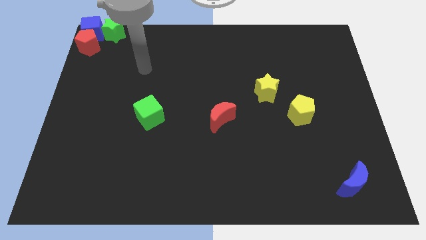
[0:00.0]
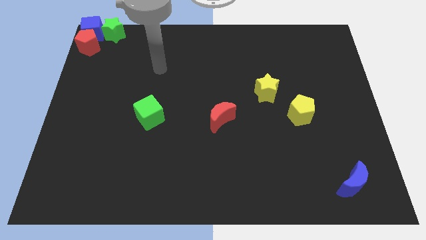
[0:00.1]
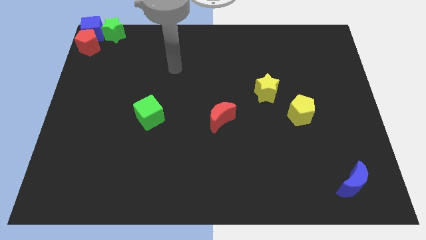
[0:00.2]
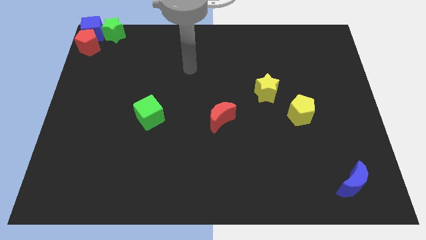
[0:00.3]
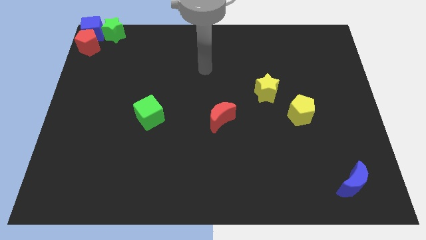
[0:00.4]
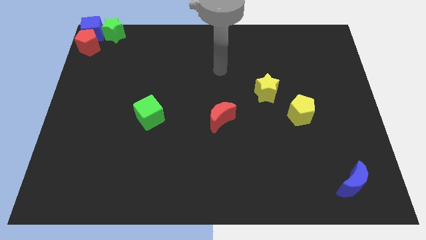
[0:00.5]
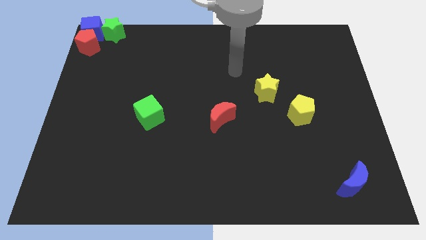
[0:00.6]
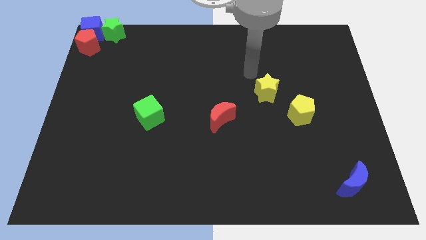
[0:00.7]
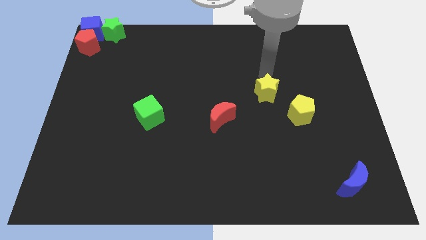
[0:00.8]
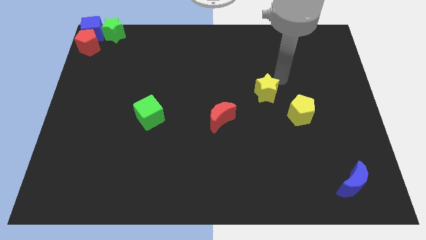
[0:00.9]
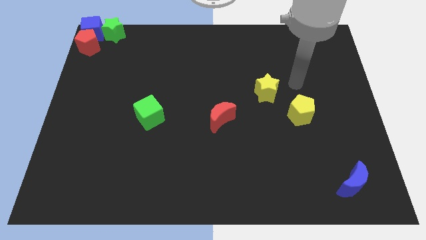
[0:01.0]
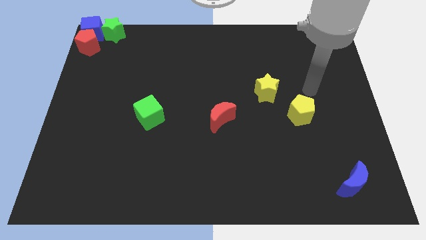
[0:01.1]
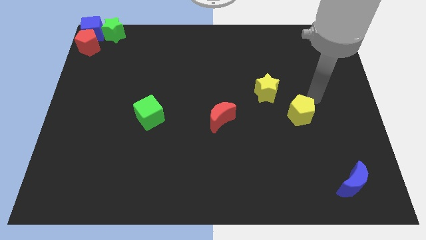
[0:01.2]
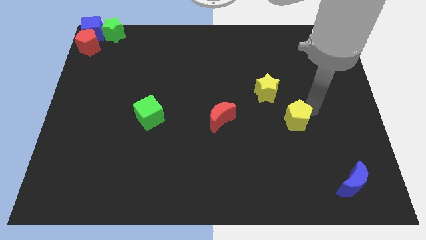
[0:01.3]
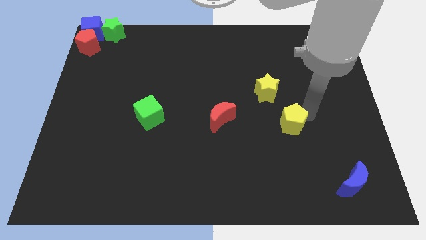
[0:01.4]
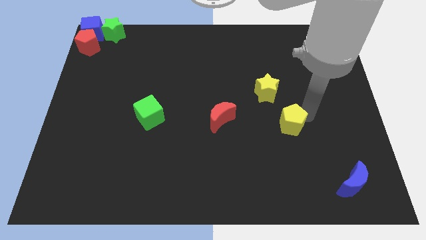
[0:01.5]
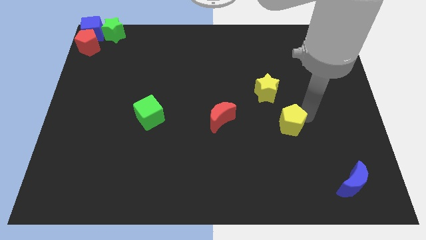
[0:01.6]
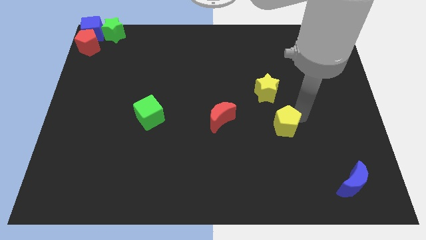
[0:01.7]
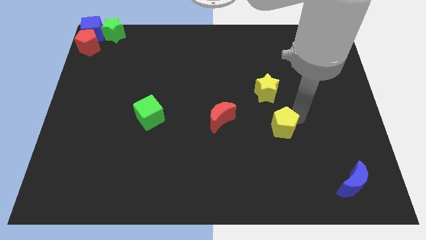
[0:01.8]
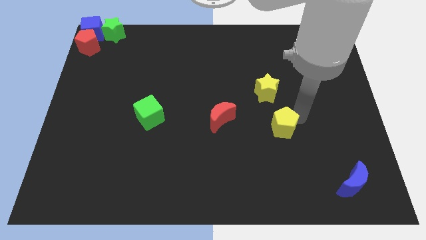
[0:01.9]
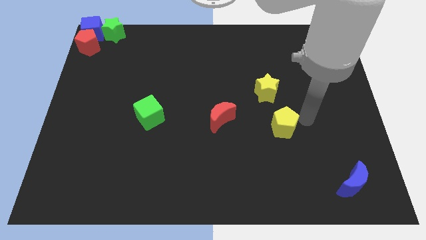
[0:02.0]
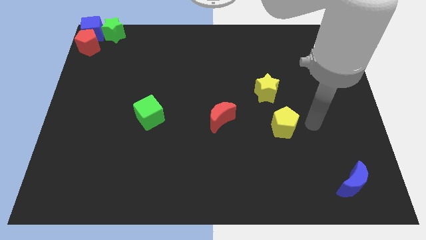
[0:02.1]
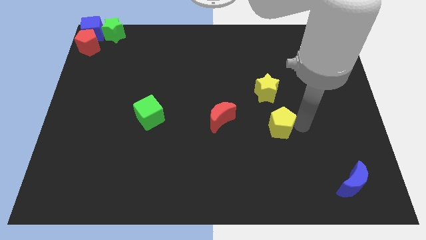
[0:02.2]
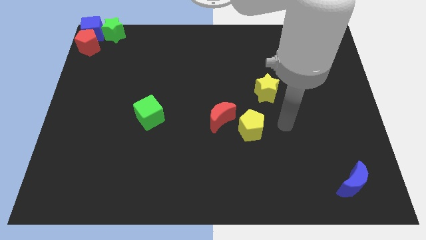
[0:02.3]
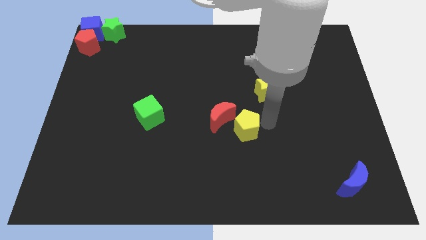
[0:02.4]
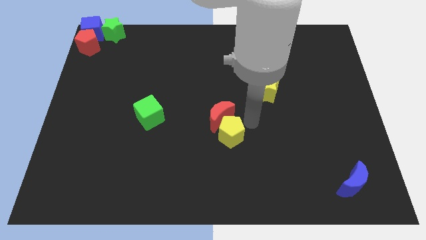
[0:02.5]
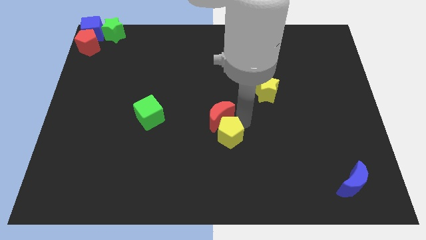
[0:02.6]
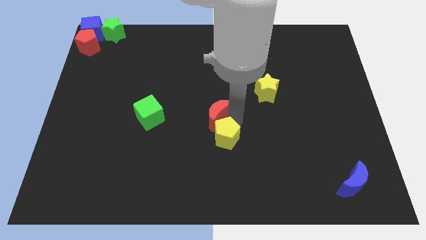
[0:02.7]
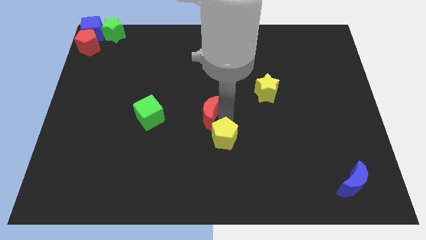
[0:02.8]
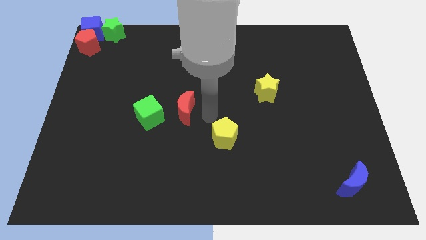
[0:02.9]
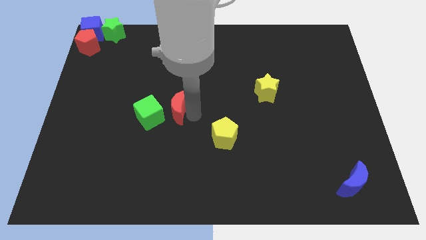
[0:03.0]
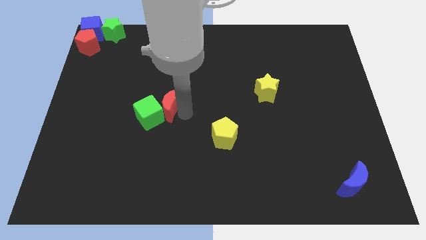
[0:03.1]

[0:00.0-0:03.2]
push the yellow pentagon towards the center of the board

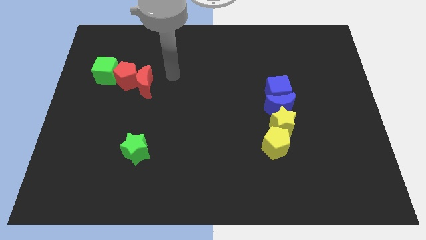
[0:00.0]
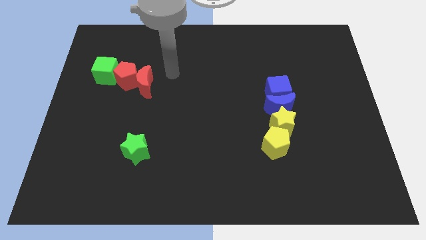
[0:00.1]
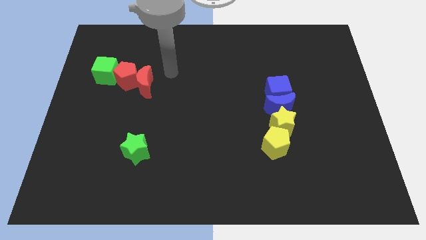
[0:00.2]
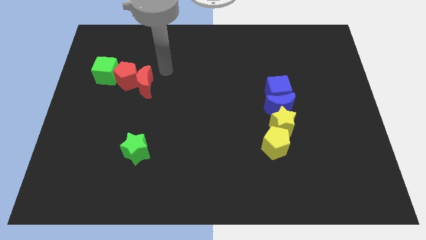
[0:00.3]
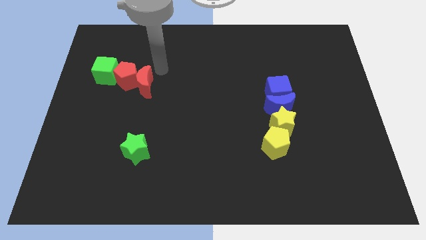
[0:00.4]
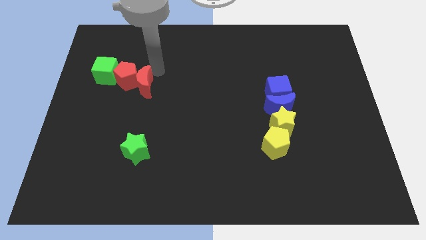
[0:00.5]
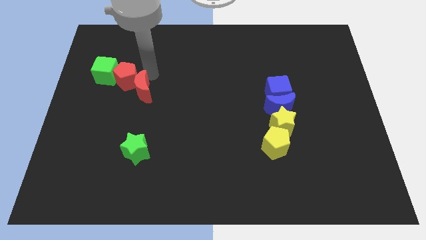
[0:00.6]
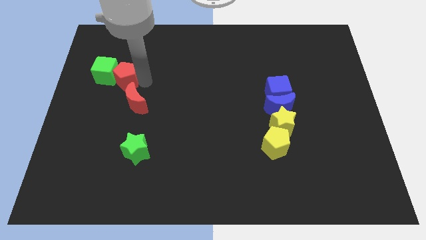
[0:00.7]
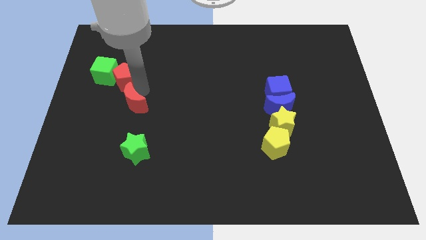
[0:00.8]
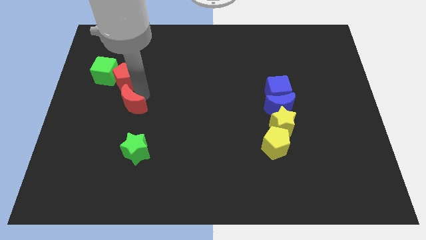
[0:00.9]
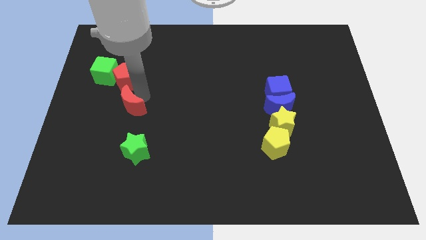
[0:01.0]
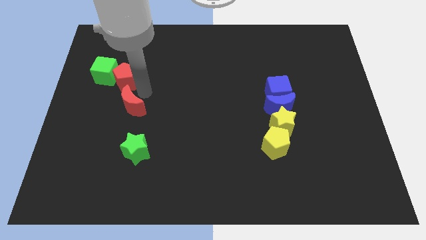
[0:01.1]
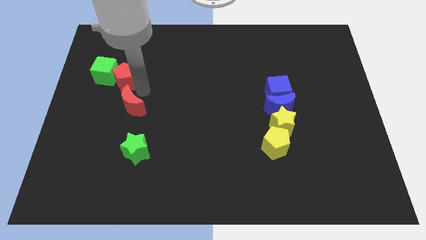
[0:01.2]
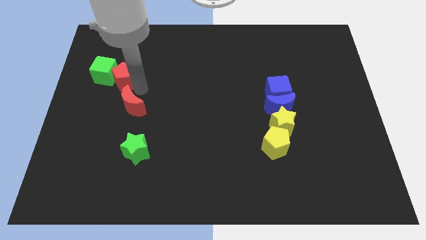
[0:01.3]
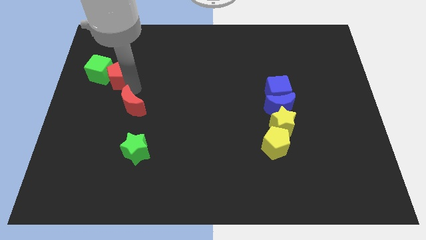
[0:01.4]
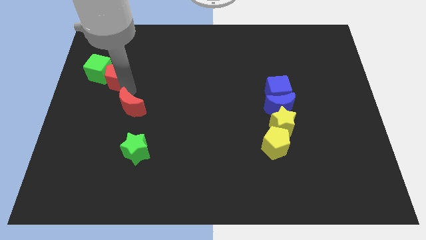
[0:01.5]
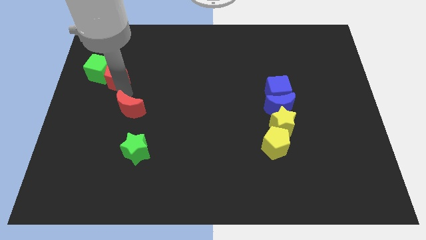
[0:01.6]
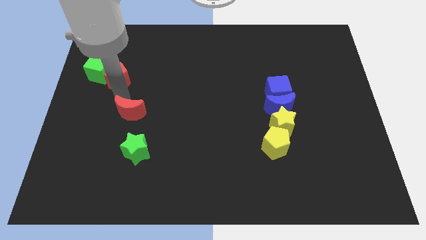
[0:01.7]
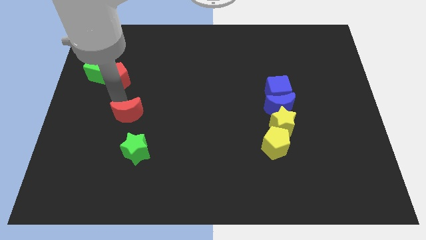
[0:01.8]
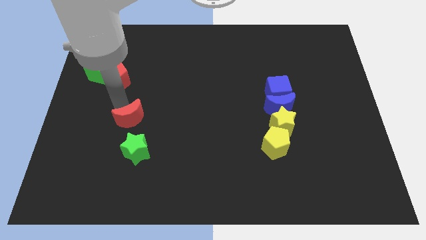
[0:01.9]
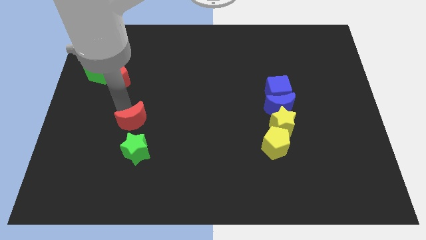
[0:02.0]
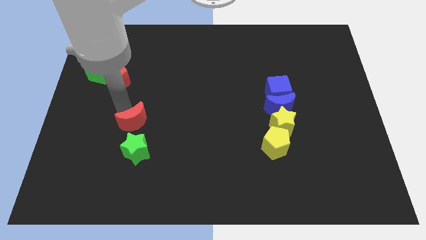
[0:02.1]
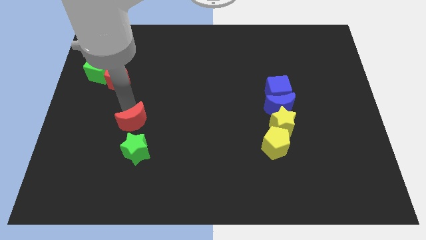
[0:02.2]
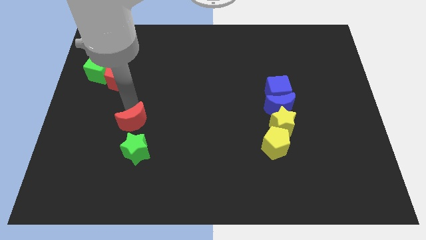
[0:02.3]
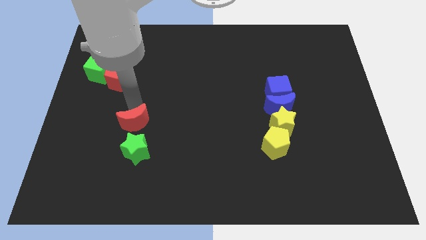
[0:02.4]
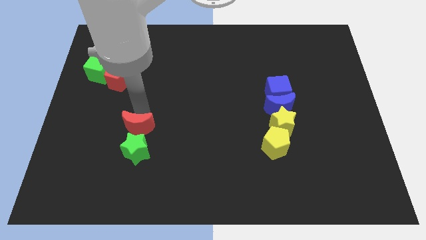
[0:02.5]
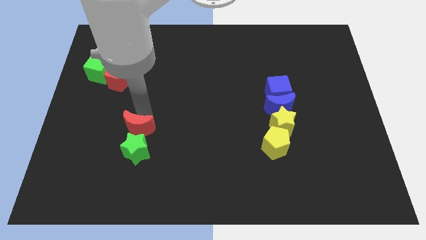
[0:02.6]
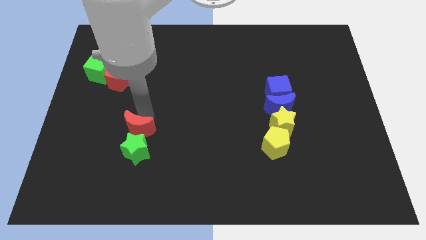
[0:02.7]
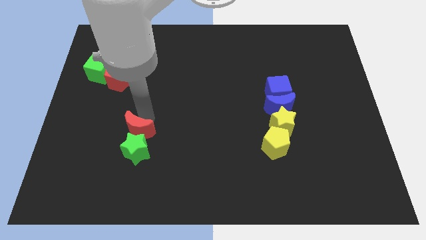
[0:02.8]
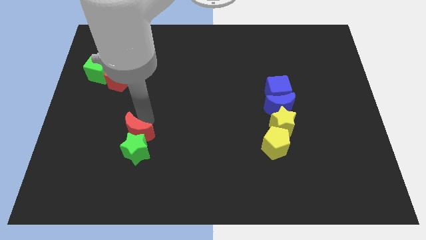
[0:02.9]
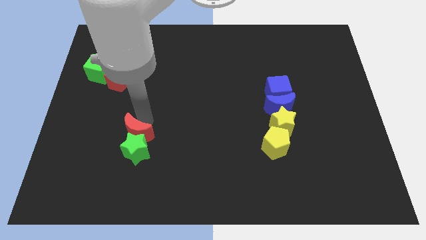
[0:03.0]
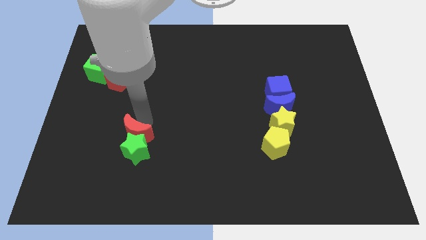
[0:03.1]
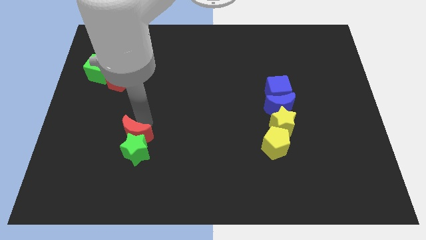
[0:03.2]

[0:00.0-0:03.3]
drag the red crescent into the top side of the green star
